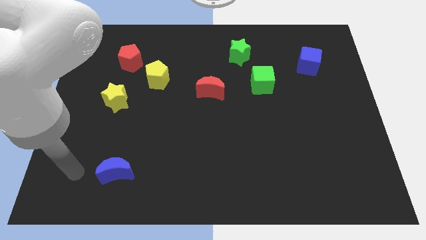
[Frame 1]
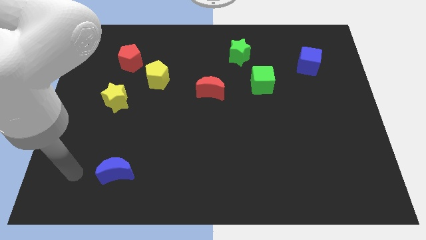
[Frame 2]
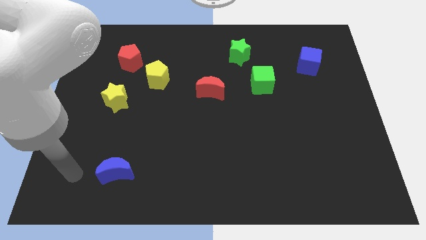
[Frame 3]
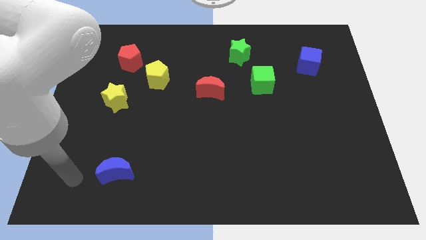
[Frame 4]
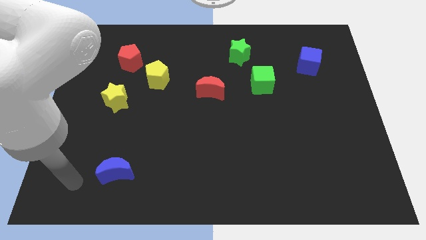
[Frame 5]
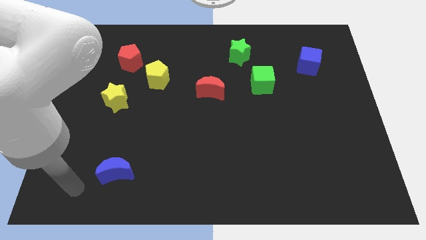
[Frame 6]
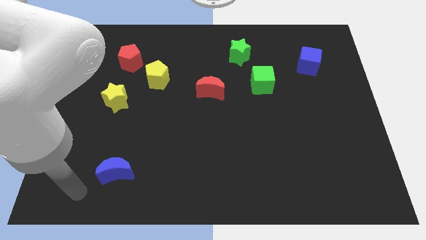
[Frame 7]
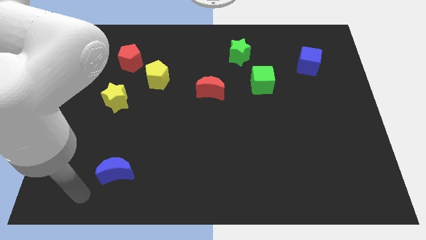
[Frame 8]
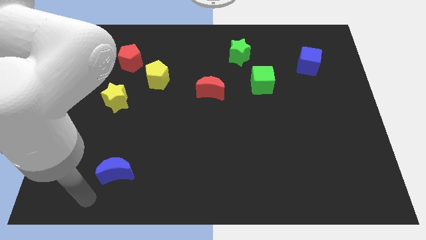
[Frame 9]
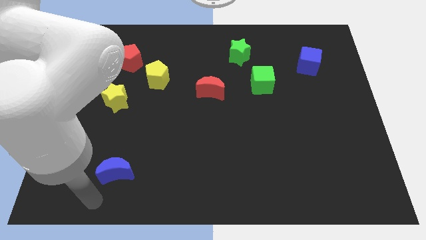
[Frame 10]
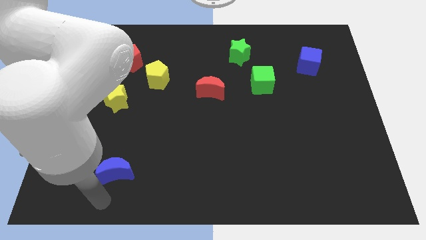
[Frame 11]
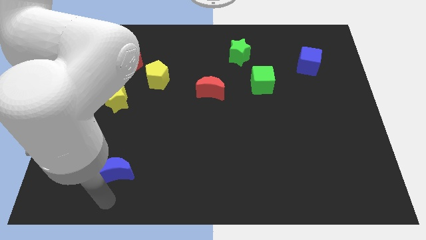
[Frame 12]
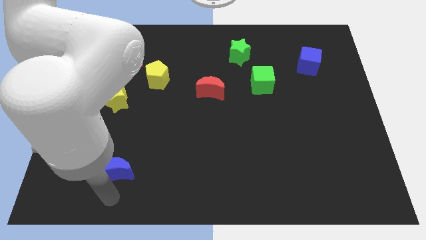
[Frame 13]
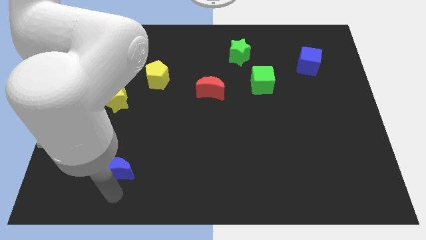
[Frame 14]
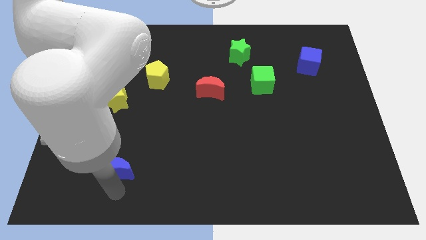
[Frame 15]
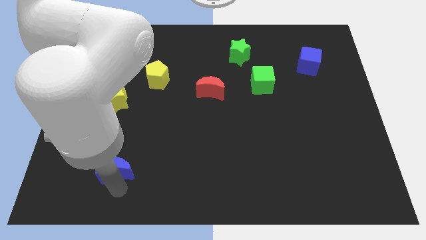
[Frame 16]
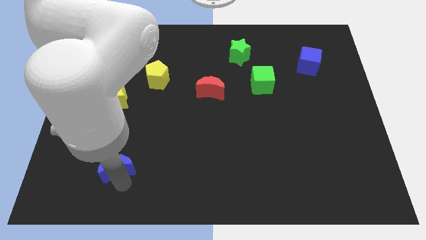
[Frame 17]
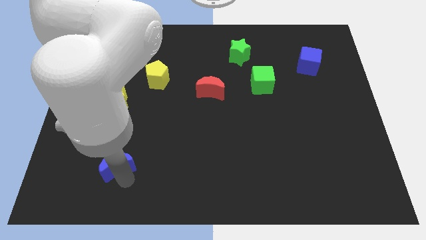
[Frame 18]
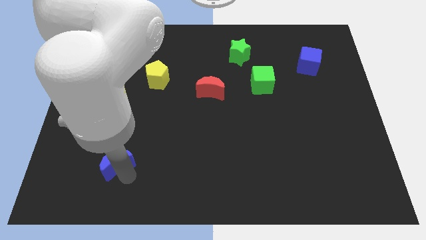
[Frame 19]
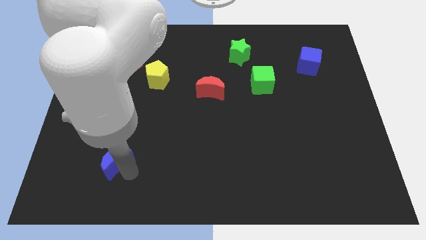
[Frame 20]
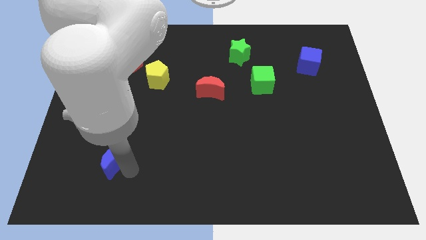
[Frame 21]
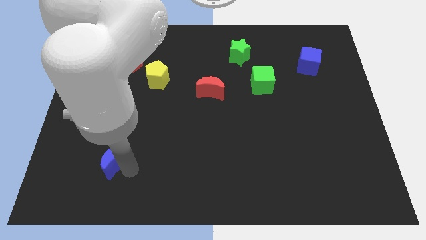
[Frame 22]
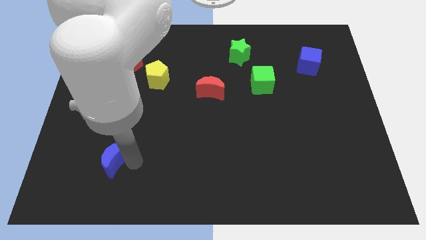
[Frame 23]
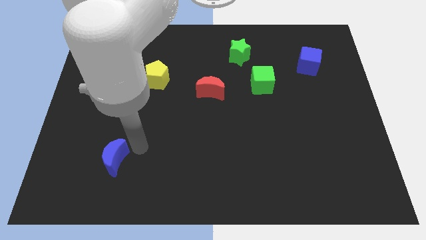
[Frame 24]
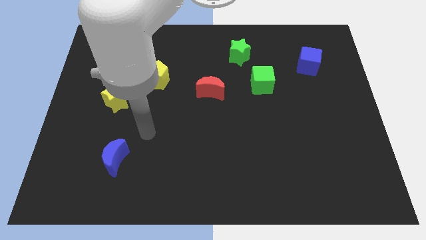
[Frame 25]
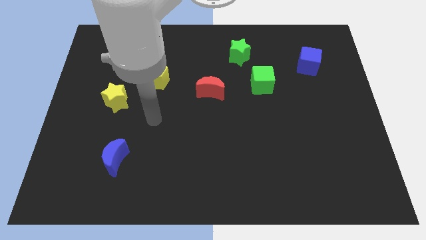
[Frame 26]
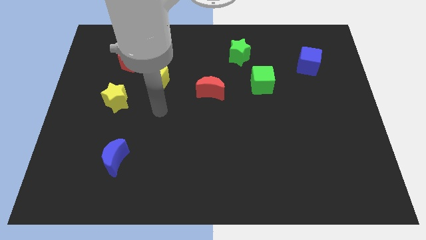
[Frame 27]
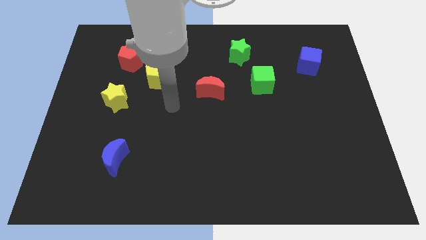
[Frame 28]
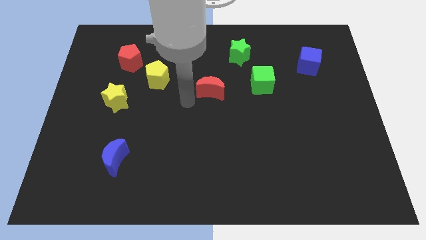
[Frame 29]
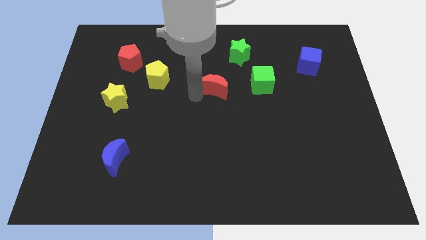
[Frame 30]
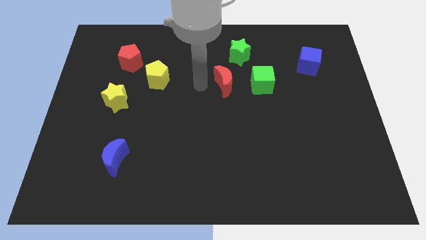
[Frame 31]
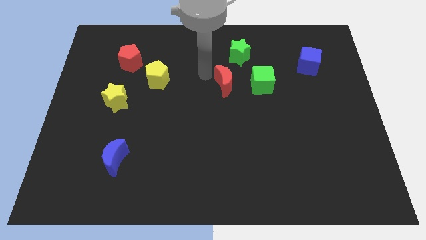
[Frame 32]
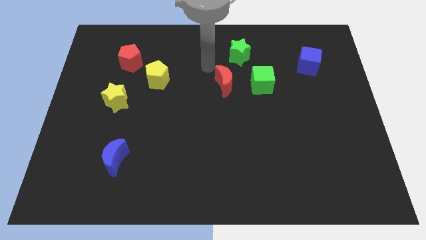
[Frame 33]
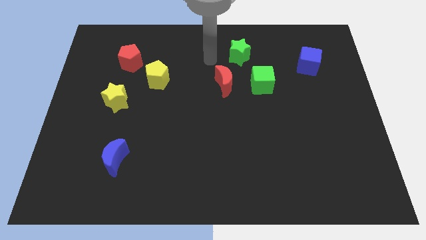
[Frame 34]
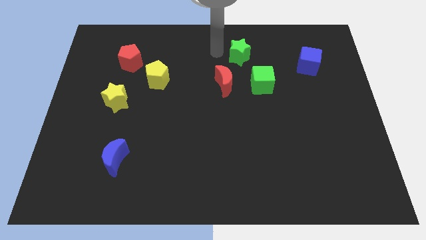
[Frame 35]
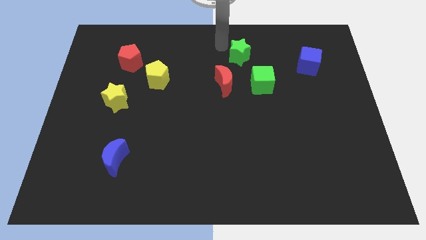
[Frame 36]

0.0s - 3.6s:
slightly move the blue moon upwards

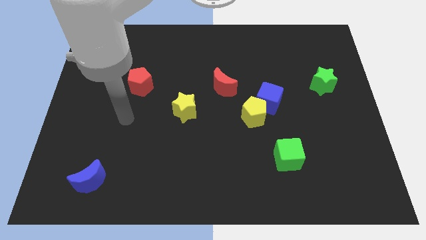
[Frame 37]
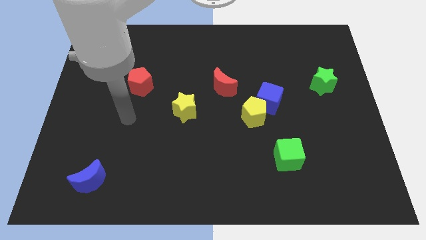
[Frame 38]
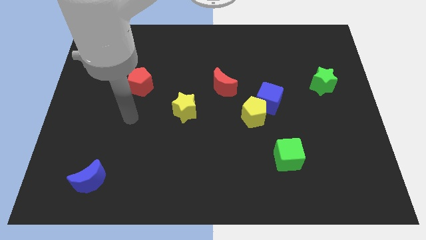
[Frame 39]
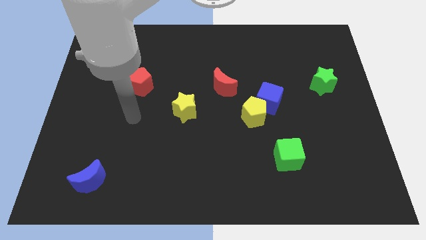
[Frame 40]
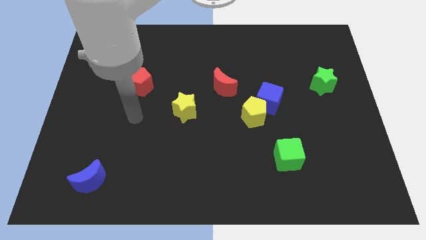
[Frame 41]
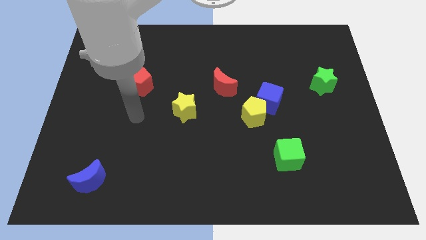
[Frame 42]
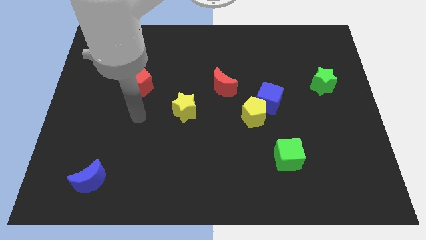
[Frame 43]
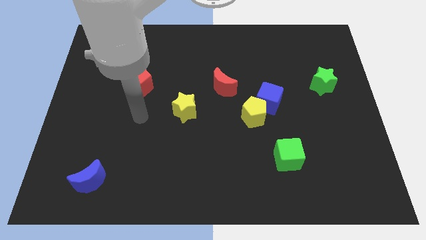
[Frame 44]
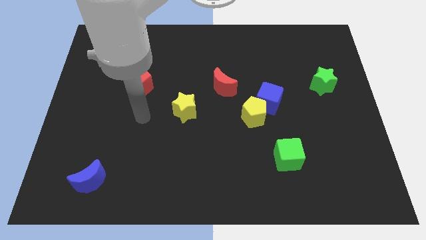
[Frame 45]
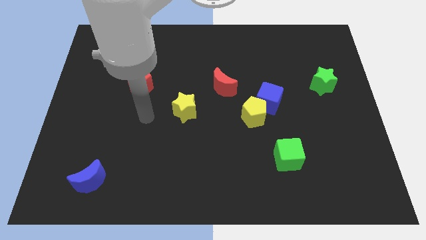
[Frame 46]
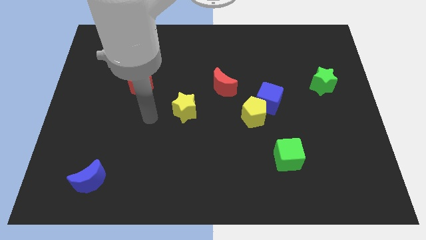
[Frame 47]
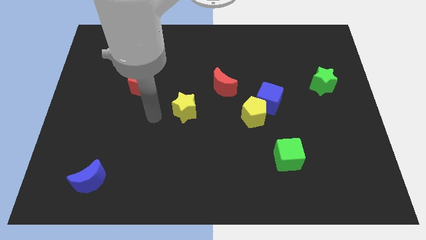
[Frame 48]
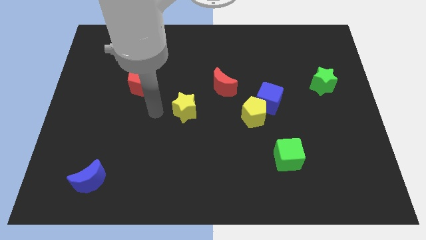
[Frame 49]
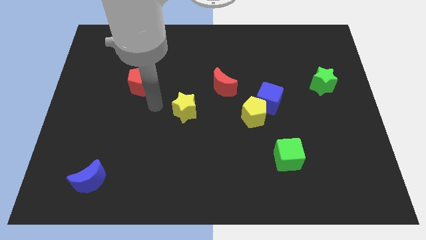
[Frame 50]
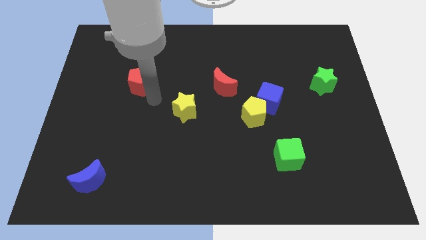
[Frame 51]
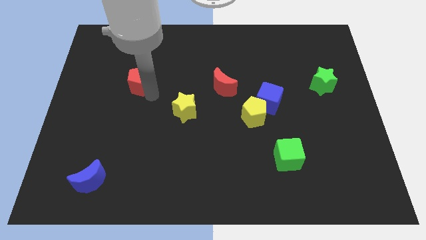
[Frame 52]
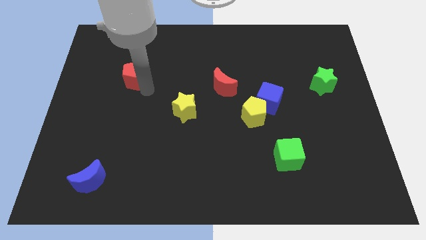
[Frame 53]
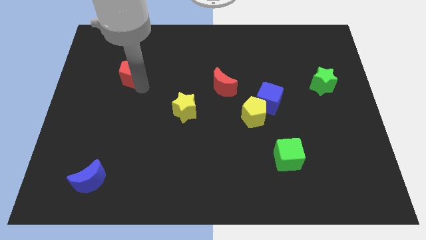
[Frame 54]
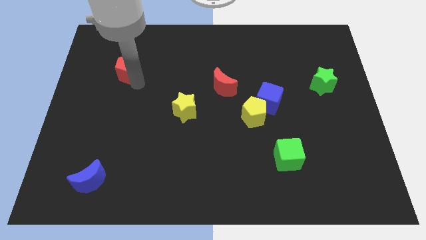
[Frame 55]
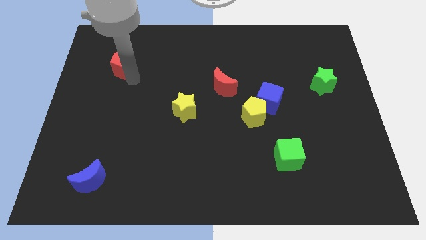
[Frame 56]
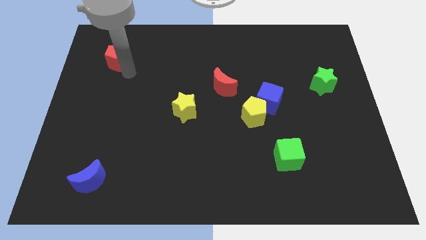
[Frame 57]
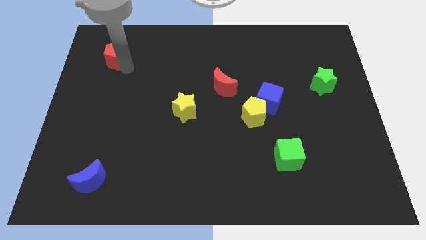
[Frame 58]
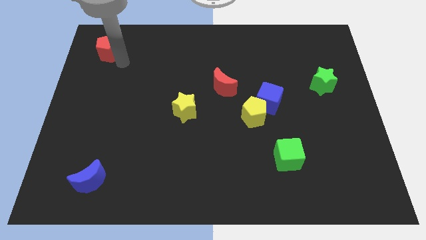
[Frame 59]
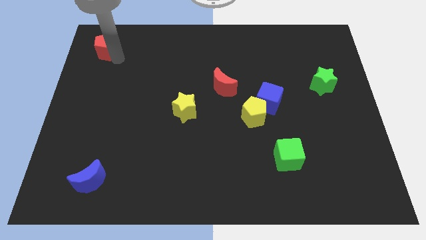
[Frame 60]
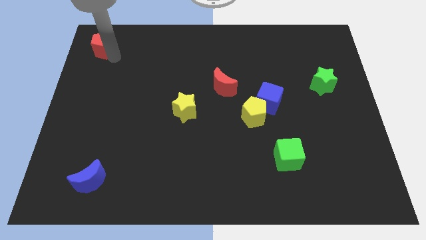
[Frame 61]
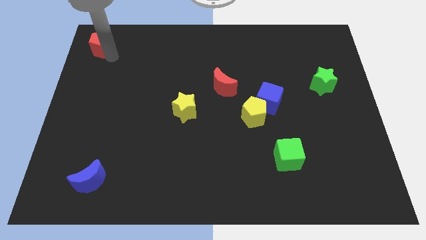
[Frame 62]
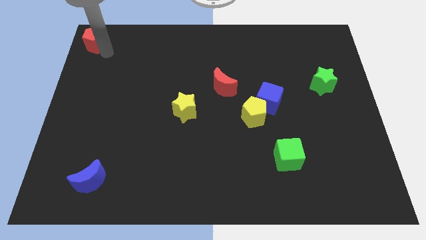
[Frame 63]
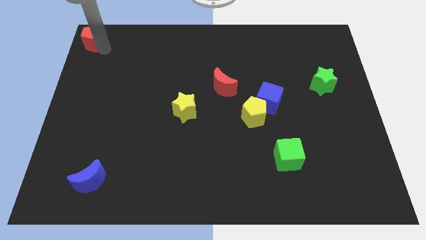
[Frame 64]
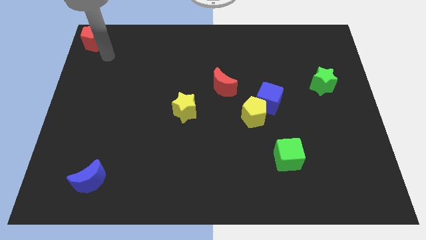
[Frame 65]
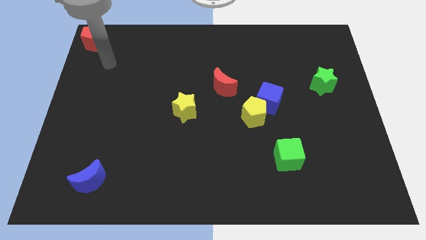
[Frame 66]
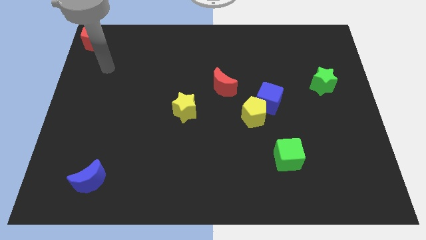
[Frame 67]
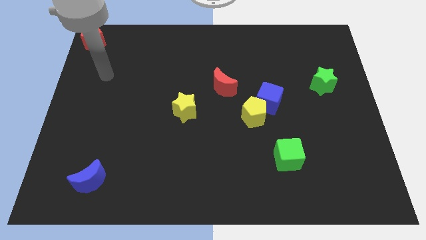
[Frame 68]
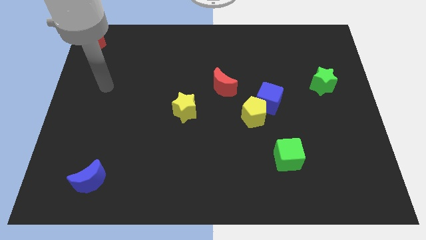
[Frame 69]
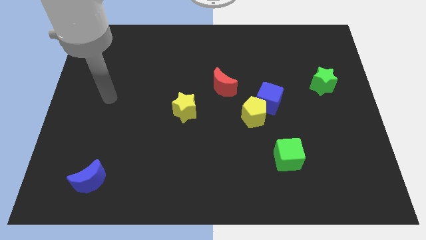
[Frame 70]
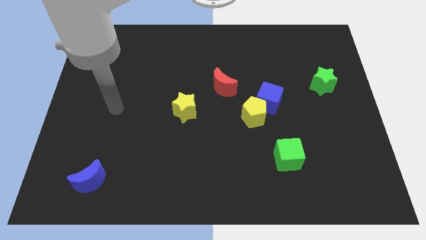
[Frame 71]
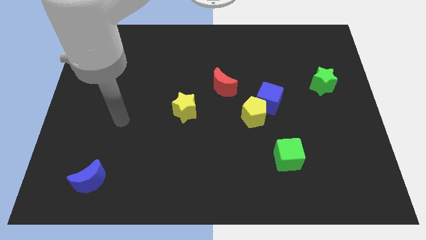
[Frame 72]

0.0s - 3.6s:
place red pentagon to the top left corner

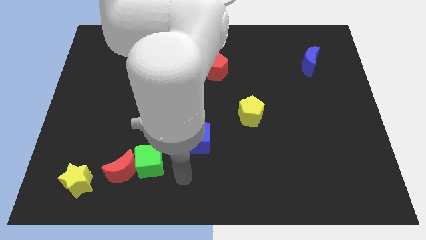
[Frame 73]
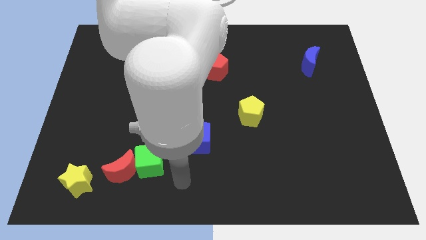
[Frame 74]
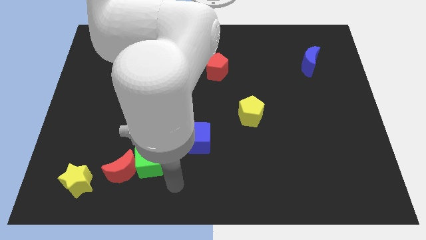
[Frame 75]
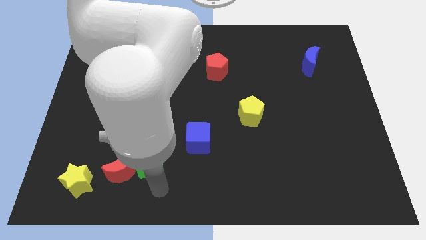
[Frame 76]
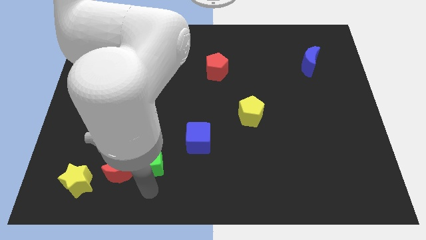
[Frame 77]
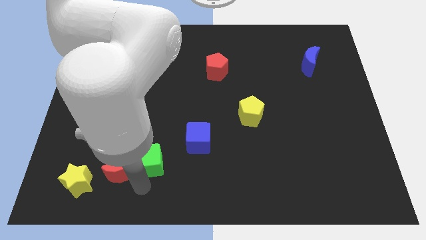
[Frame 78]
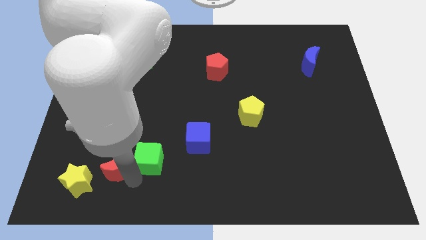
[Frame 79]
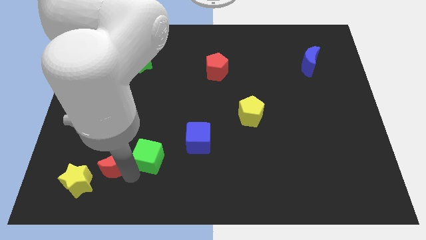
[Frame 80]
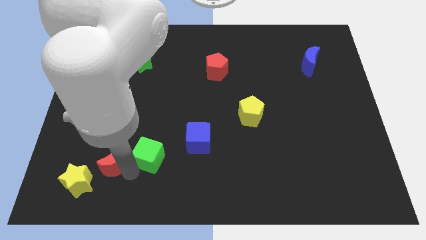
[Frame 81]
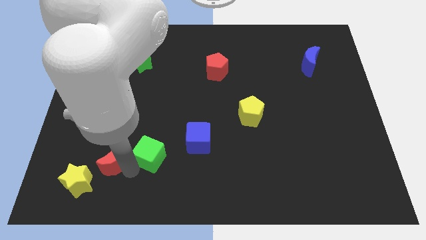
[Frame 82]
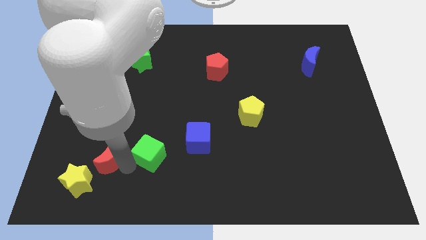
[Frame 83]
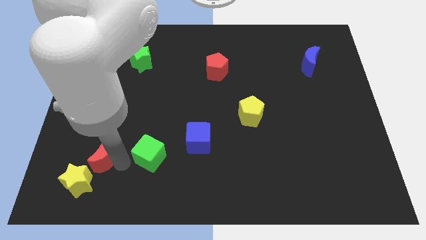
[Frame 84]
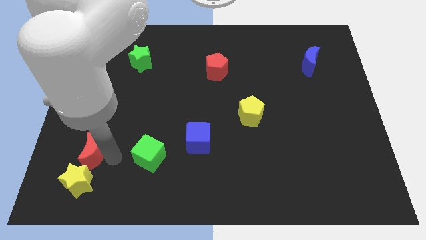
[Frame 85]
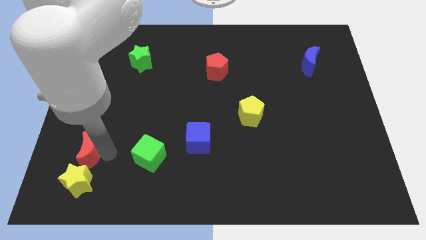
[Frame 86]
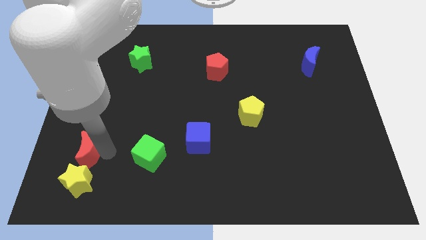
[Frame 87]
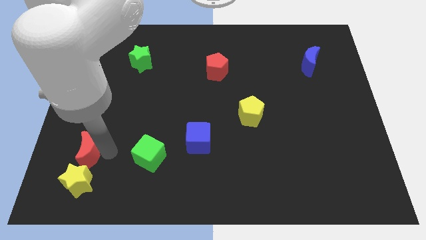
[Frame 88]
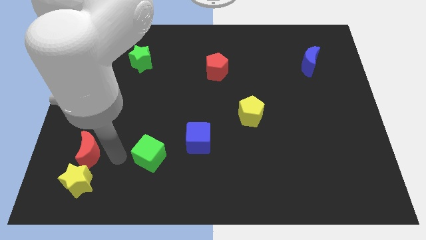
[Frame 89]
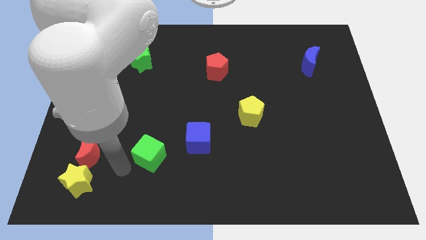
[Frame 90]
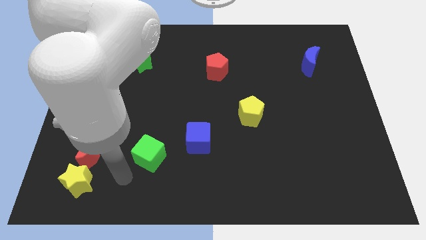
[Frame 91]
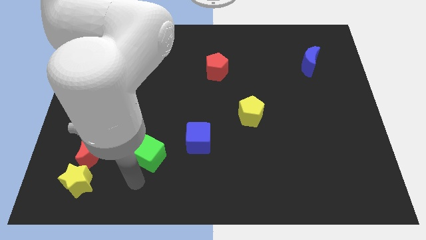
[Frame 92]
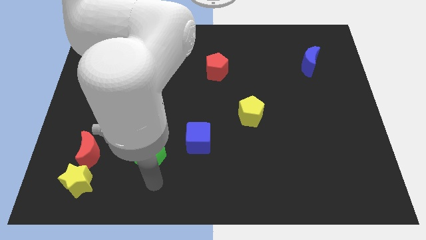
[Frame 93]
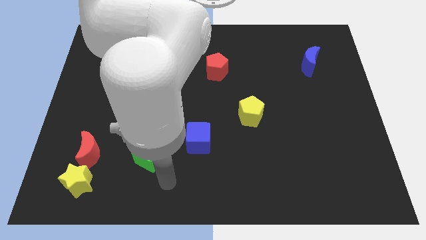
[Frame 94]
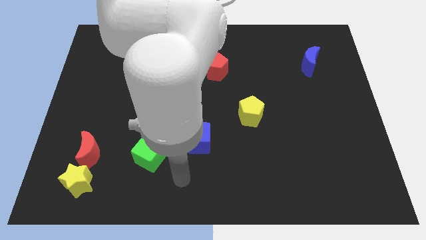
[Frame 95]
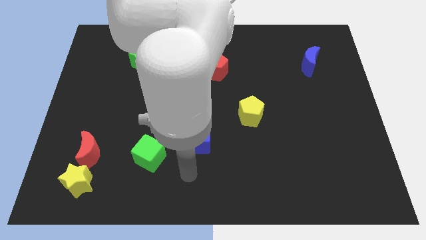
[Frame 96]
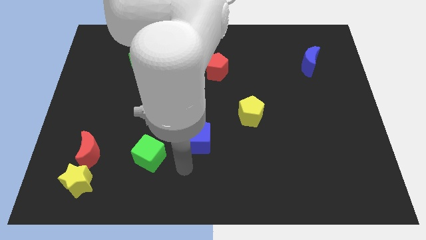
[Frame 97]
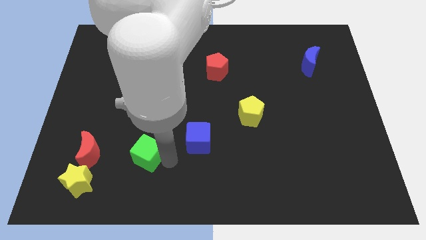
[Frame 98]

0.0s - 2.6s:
drag the green cube to the right side of red moon
